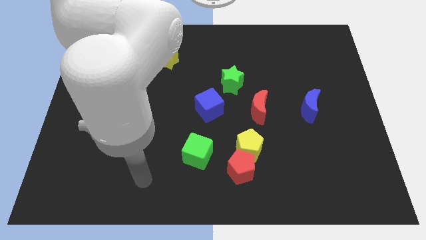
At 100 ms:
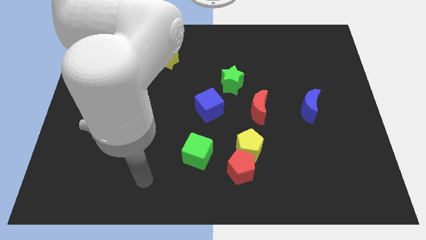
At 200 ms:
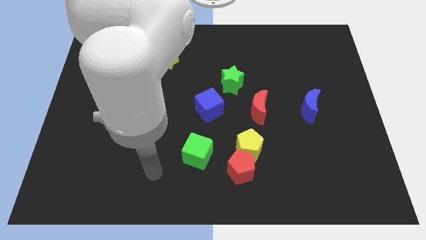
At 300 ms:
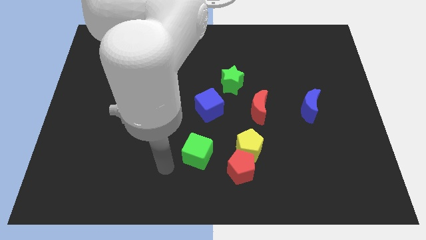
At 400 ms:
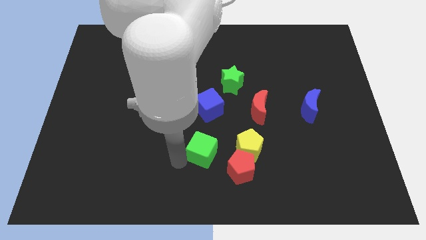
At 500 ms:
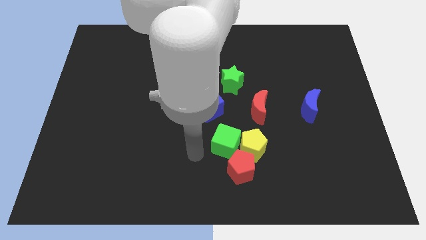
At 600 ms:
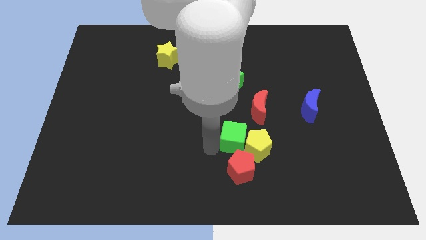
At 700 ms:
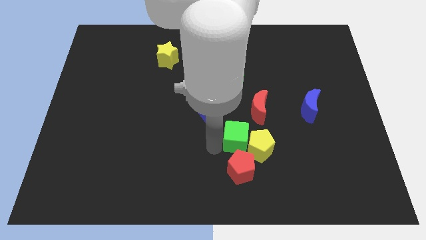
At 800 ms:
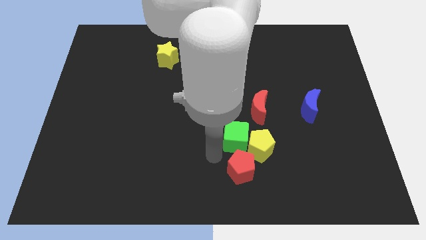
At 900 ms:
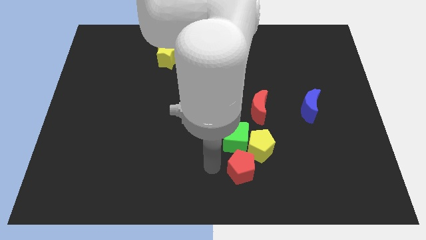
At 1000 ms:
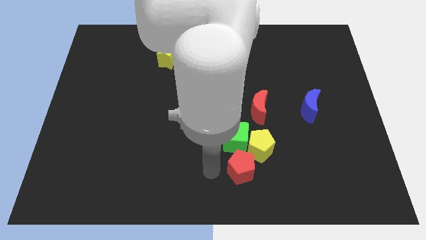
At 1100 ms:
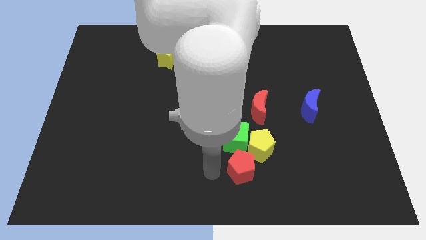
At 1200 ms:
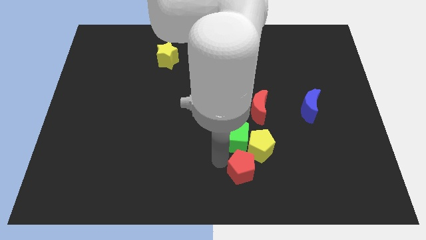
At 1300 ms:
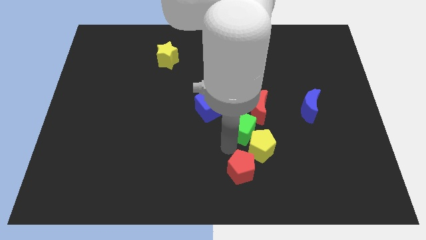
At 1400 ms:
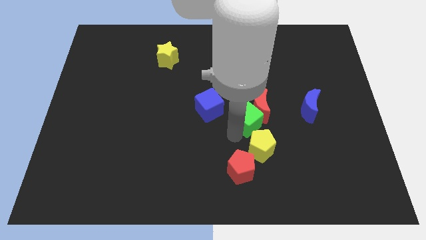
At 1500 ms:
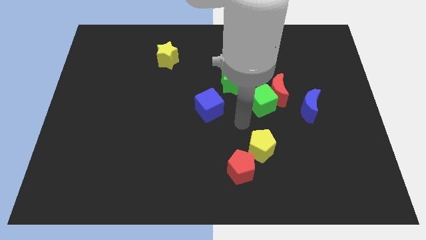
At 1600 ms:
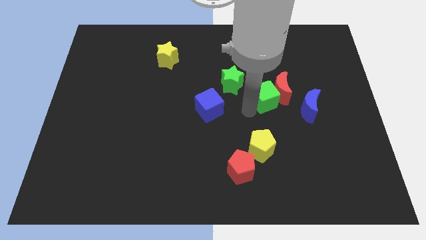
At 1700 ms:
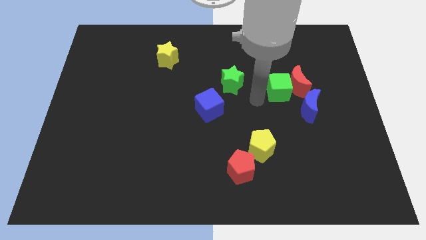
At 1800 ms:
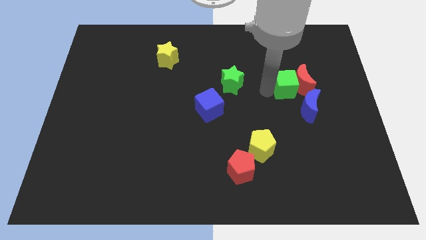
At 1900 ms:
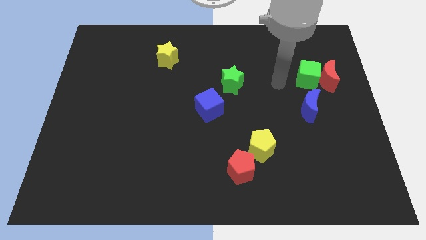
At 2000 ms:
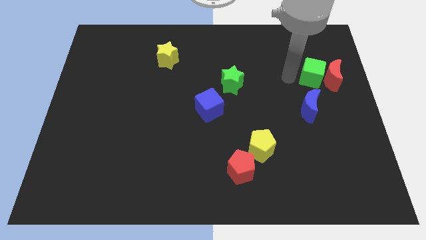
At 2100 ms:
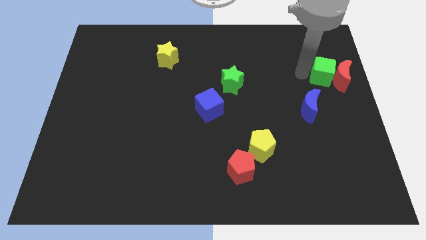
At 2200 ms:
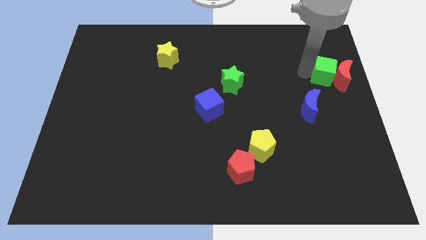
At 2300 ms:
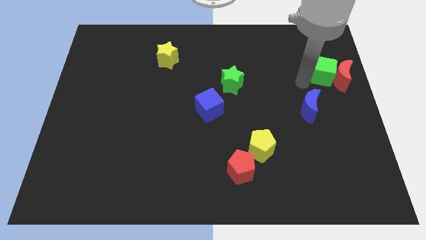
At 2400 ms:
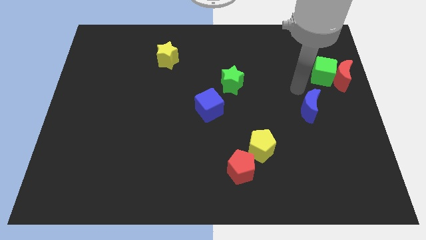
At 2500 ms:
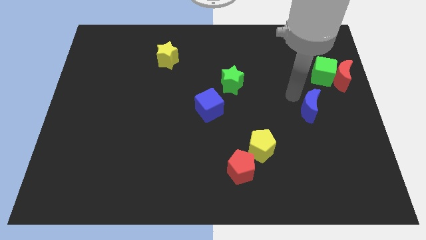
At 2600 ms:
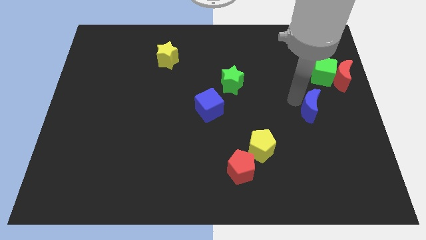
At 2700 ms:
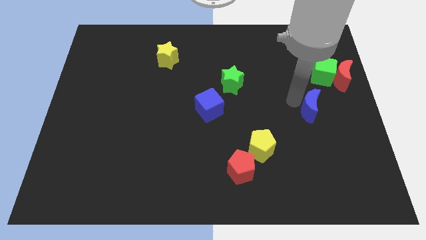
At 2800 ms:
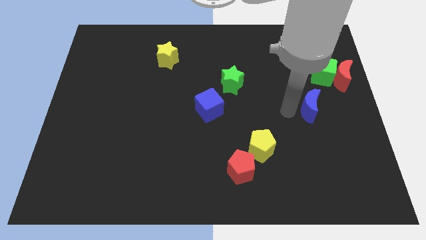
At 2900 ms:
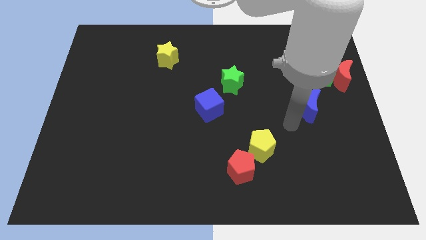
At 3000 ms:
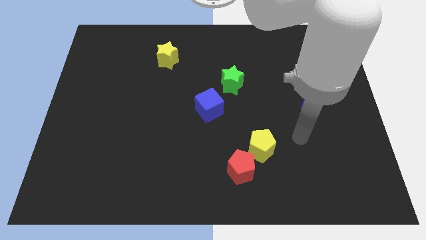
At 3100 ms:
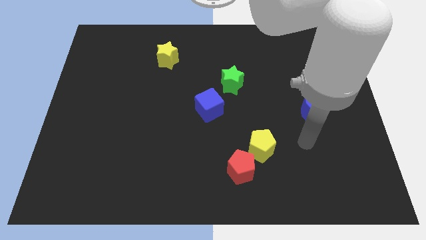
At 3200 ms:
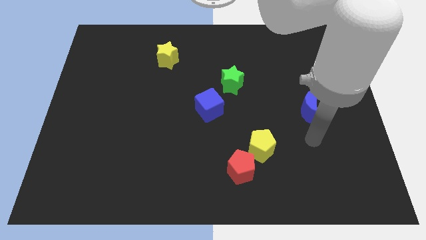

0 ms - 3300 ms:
move green cube and red moon to the right of the board

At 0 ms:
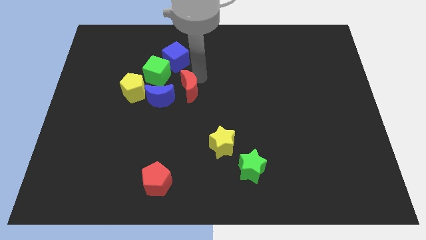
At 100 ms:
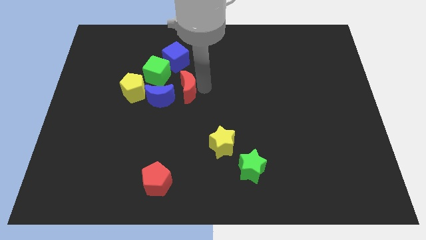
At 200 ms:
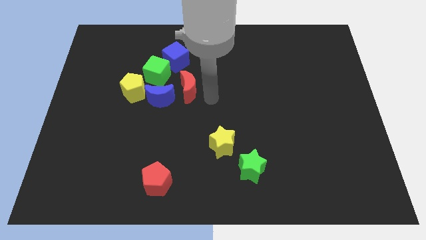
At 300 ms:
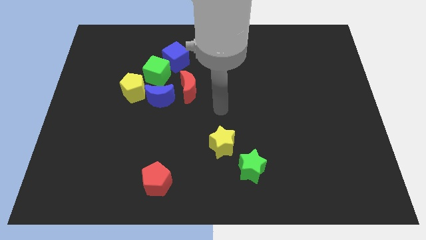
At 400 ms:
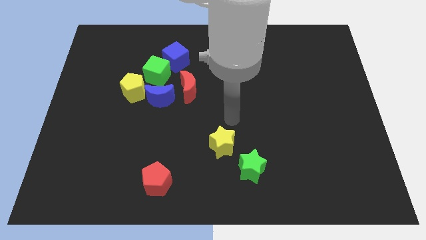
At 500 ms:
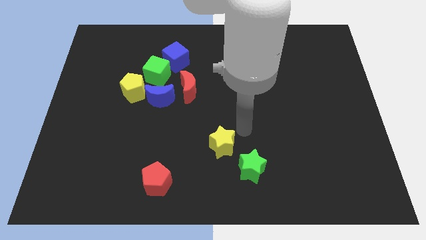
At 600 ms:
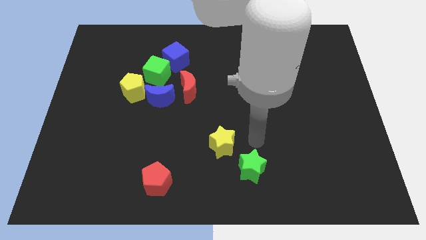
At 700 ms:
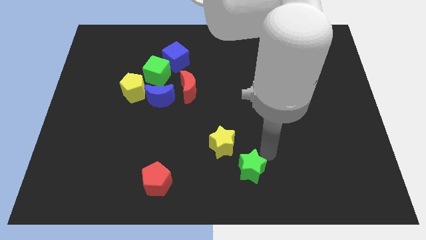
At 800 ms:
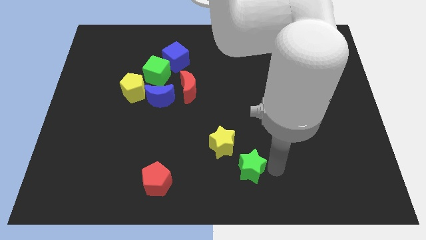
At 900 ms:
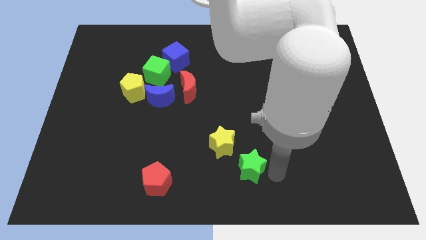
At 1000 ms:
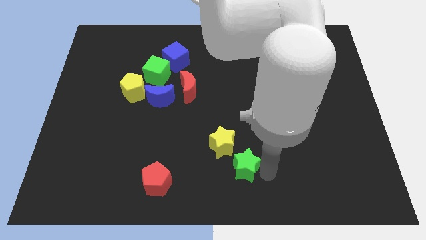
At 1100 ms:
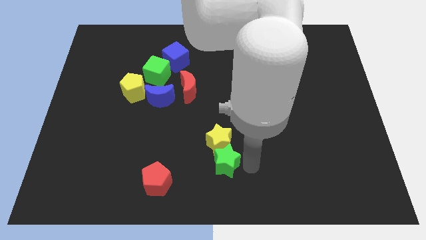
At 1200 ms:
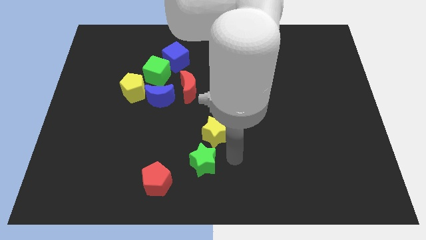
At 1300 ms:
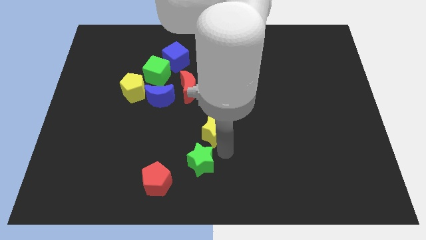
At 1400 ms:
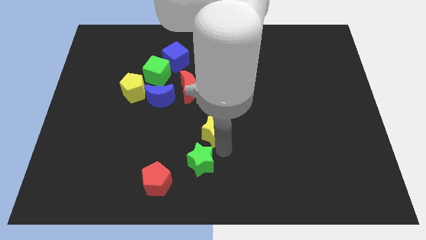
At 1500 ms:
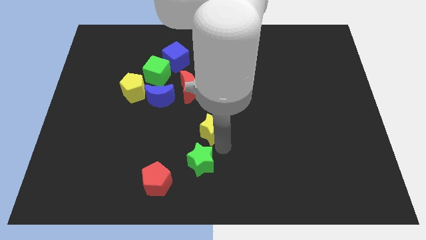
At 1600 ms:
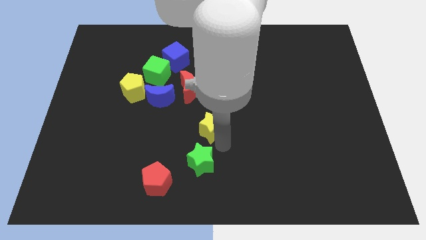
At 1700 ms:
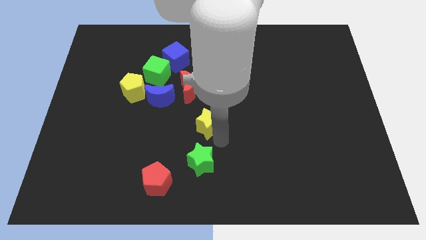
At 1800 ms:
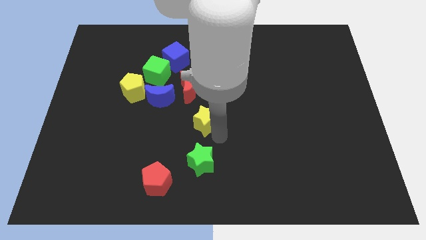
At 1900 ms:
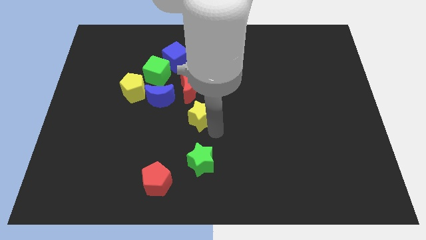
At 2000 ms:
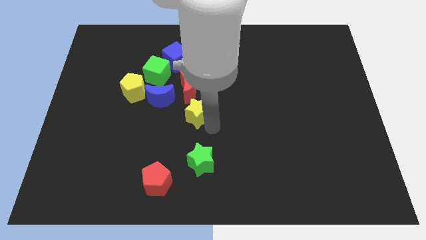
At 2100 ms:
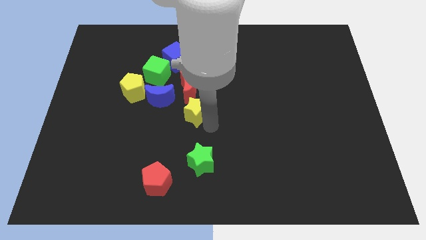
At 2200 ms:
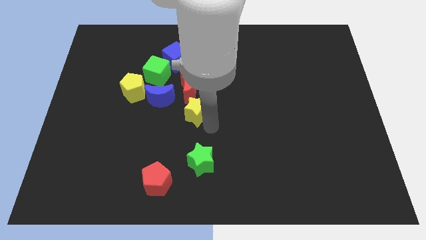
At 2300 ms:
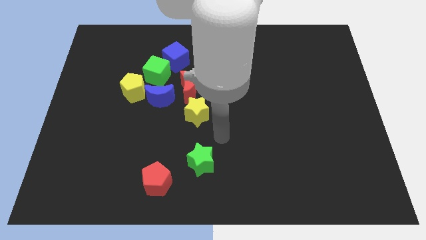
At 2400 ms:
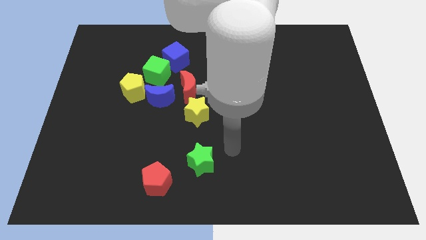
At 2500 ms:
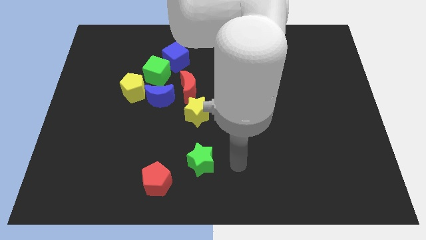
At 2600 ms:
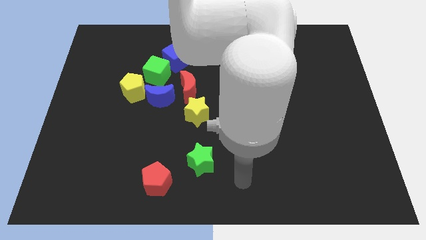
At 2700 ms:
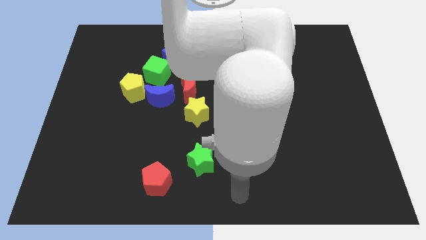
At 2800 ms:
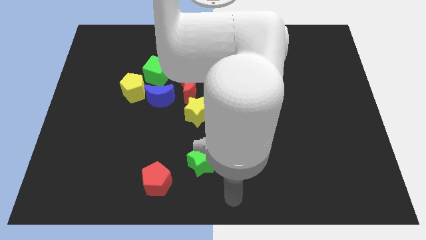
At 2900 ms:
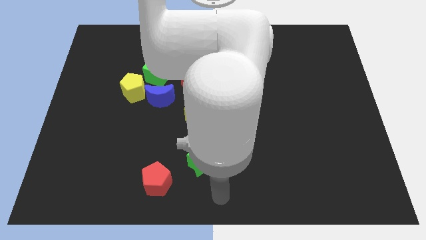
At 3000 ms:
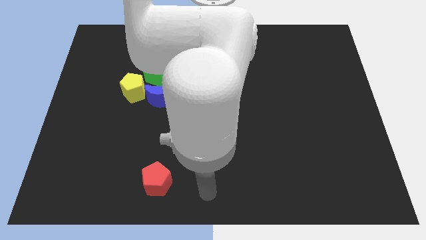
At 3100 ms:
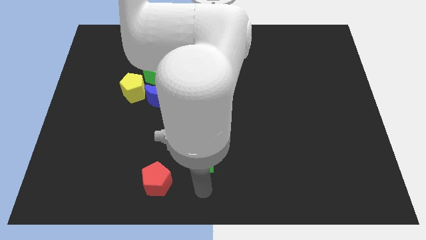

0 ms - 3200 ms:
push yellow star to the bottom of red moon

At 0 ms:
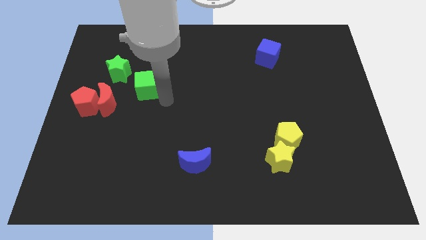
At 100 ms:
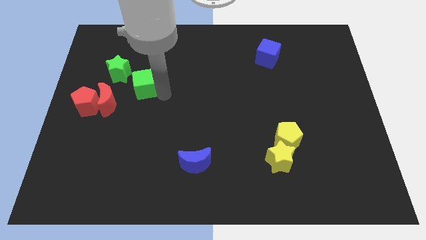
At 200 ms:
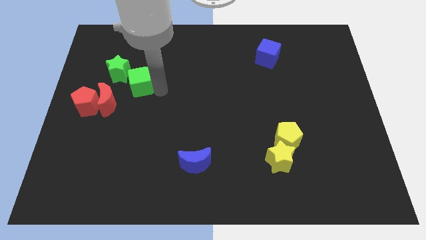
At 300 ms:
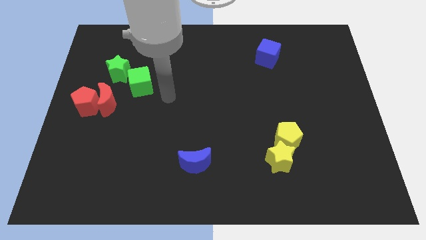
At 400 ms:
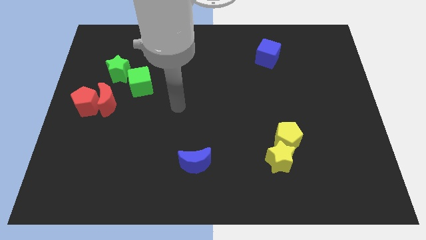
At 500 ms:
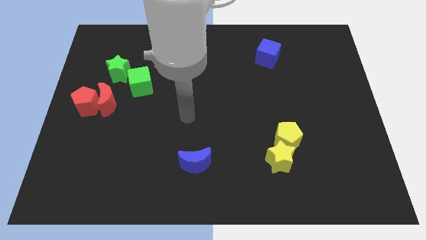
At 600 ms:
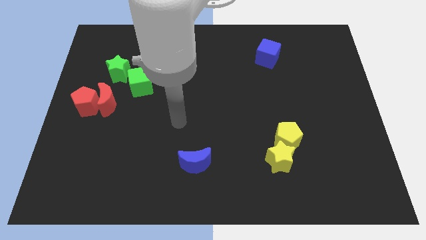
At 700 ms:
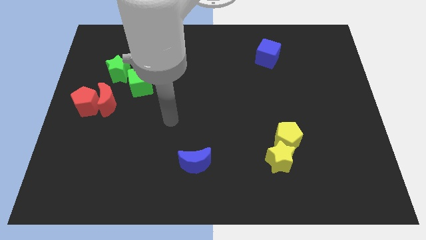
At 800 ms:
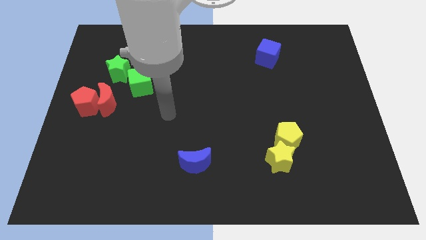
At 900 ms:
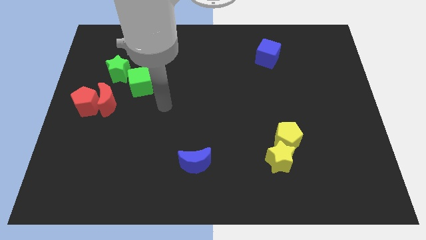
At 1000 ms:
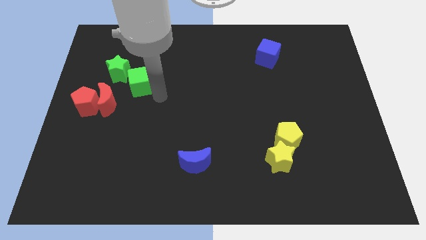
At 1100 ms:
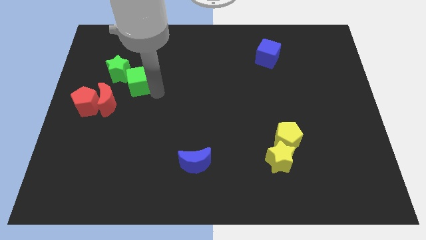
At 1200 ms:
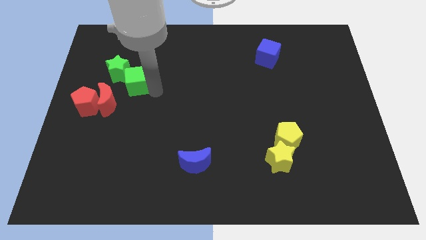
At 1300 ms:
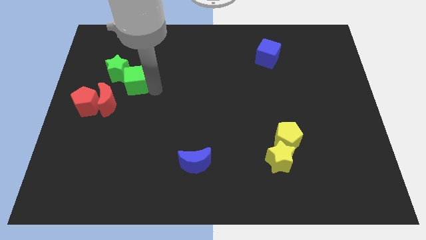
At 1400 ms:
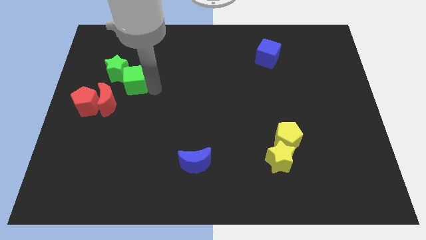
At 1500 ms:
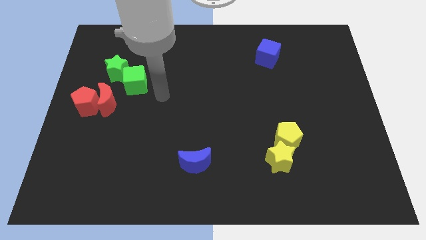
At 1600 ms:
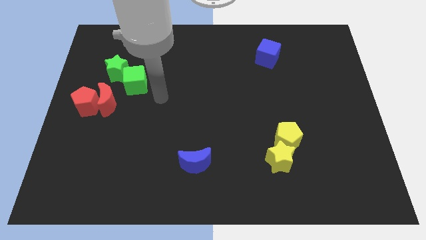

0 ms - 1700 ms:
move the green cube into the green star

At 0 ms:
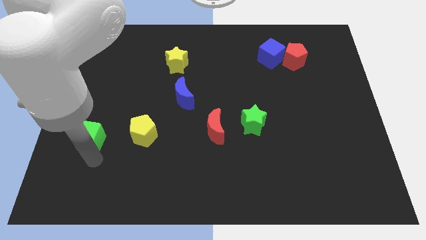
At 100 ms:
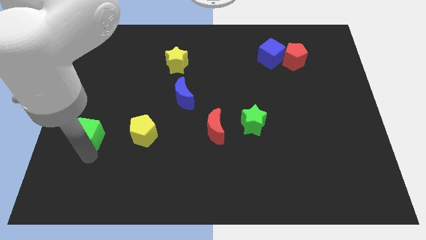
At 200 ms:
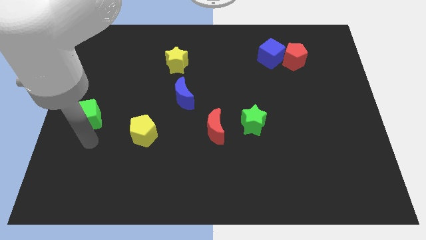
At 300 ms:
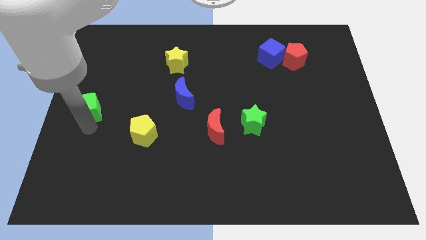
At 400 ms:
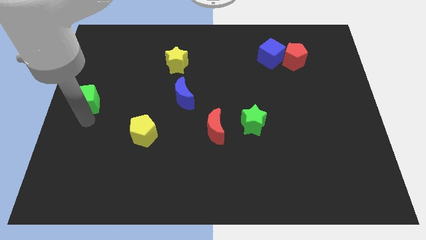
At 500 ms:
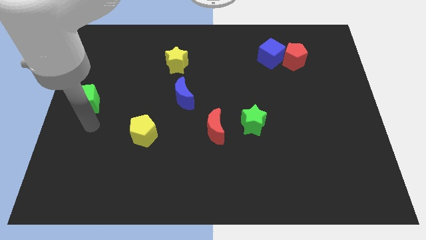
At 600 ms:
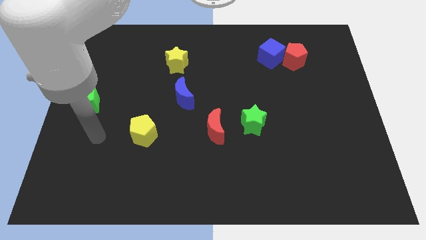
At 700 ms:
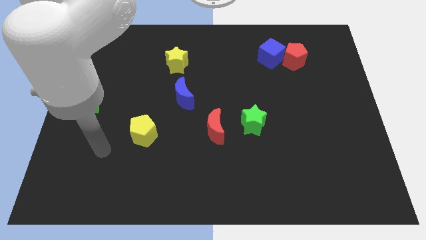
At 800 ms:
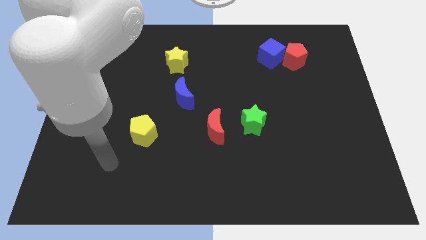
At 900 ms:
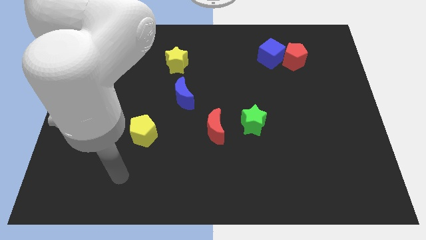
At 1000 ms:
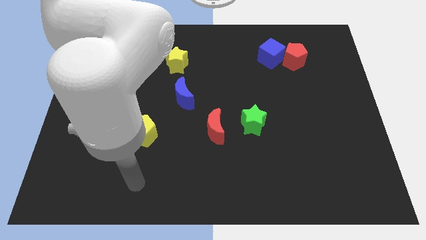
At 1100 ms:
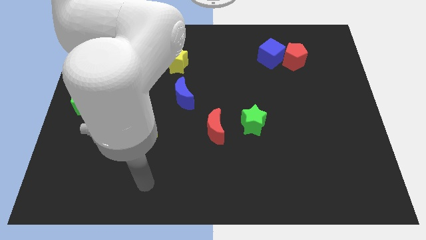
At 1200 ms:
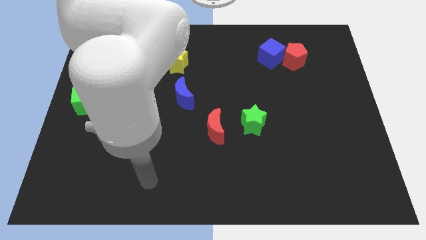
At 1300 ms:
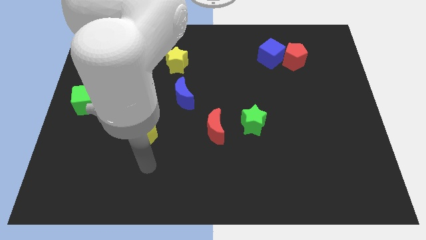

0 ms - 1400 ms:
push the green cube towards the top
